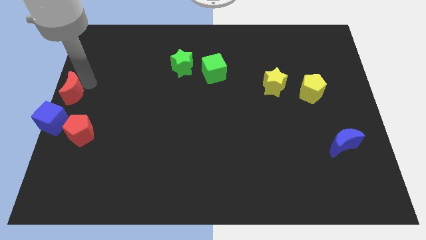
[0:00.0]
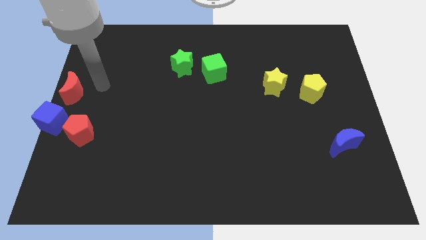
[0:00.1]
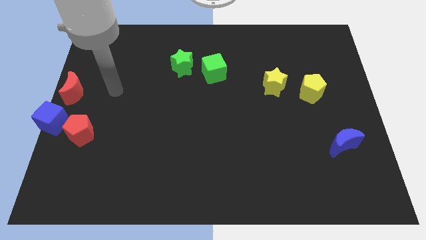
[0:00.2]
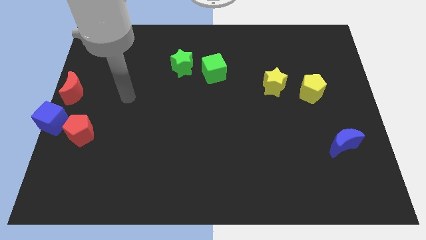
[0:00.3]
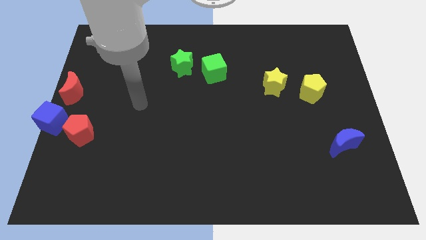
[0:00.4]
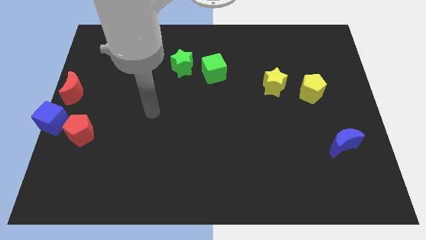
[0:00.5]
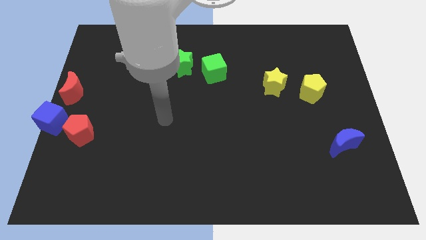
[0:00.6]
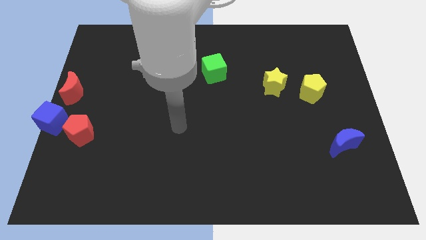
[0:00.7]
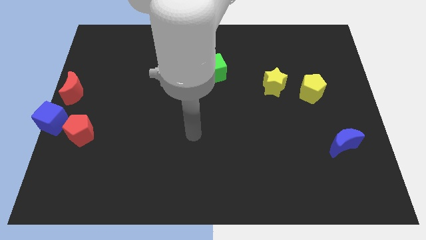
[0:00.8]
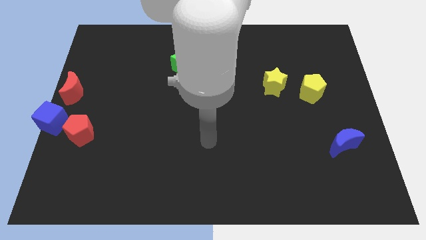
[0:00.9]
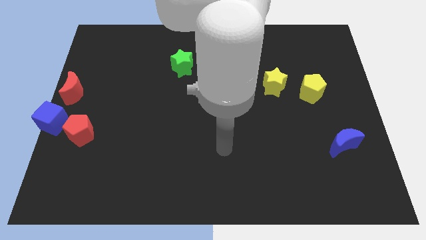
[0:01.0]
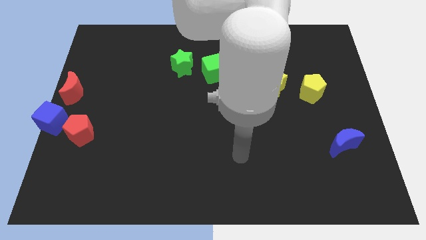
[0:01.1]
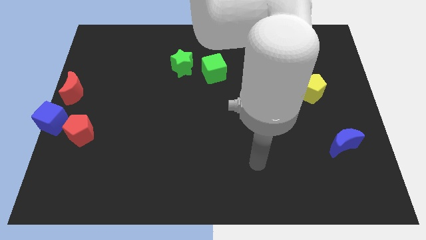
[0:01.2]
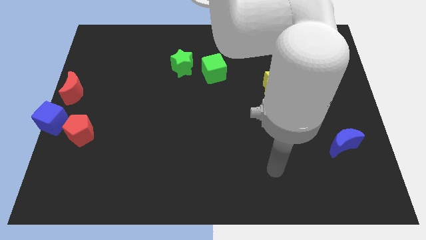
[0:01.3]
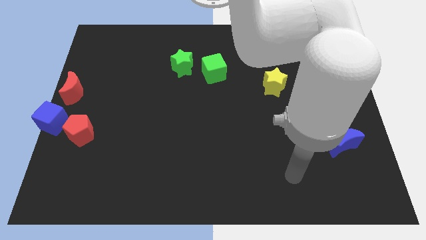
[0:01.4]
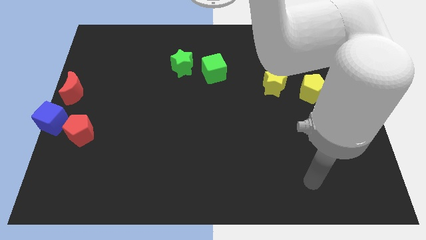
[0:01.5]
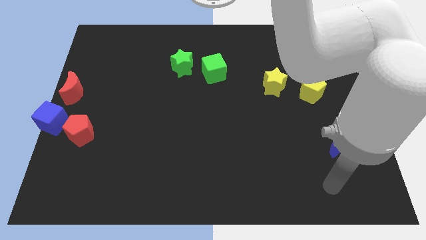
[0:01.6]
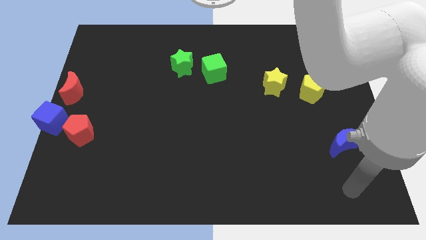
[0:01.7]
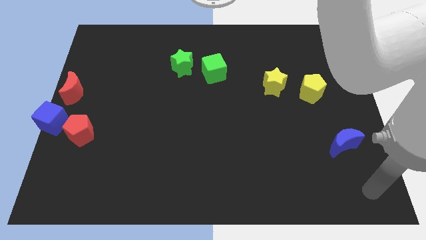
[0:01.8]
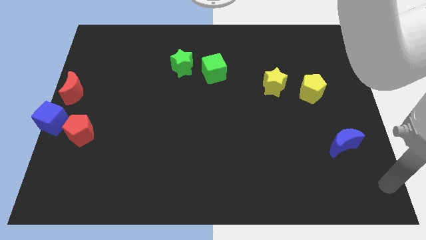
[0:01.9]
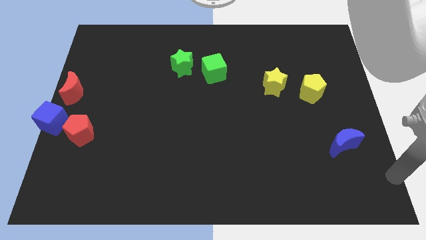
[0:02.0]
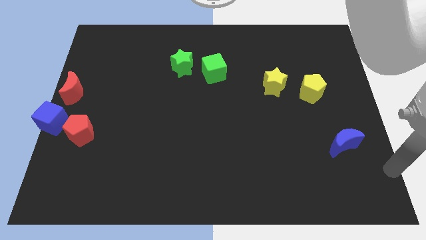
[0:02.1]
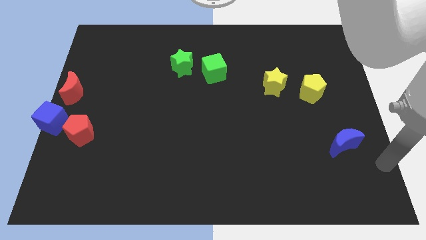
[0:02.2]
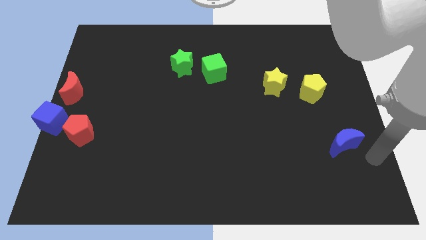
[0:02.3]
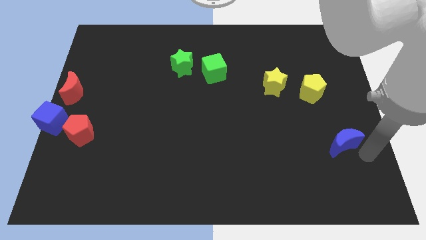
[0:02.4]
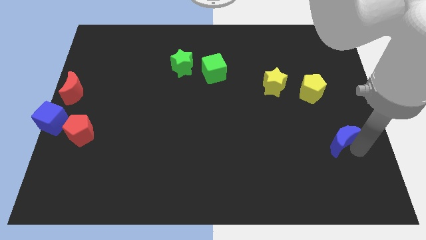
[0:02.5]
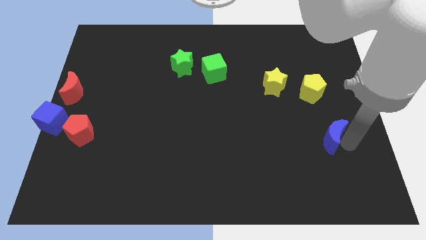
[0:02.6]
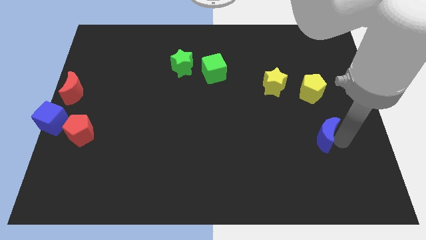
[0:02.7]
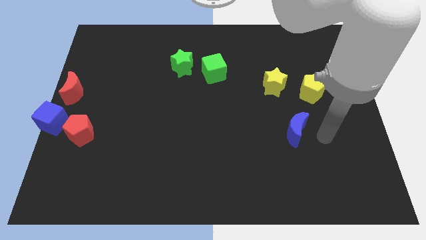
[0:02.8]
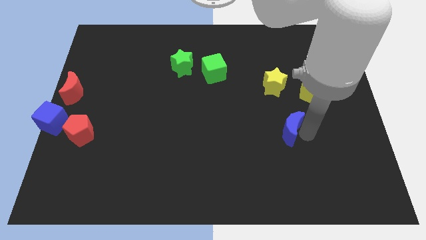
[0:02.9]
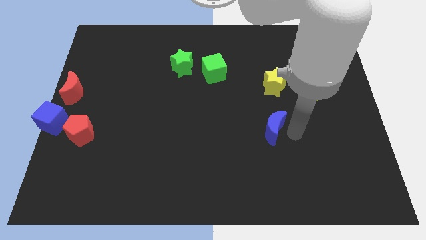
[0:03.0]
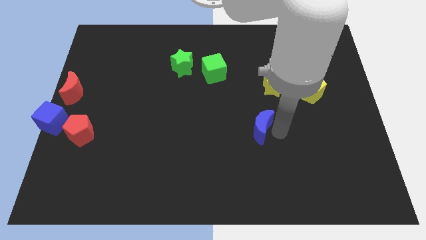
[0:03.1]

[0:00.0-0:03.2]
put the blue moon below the yellow star

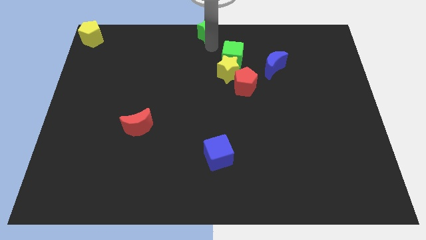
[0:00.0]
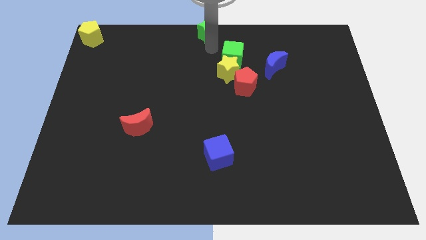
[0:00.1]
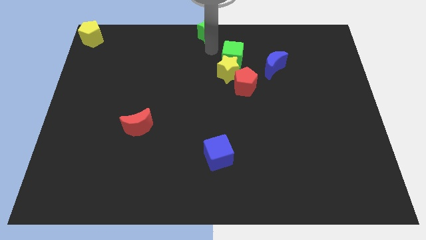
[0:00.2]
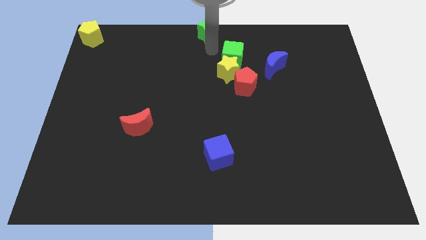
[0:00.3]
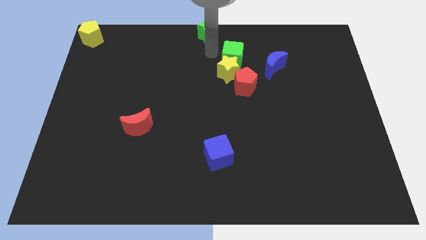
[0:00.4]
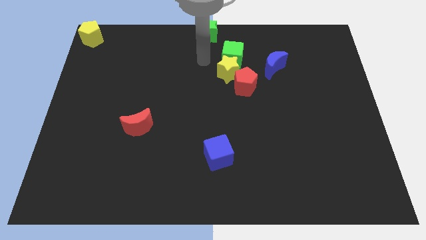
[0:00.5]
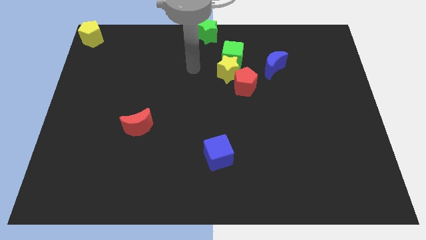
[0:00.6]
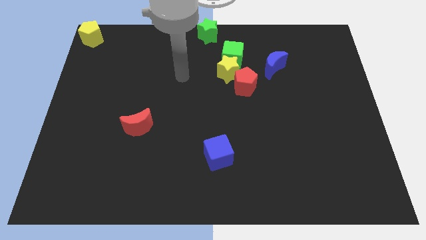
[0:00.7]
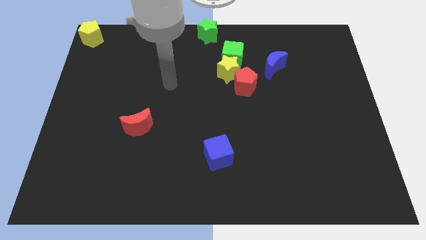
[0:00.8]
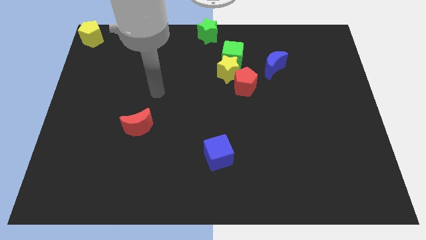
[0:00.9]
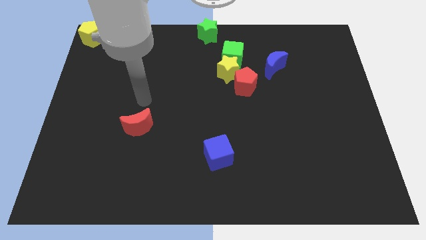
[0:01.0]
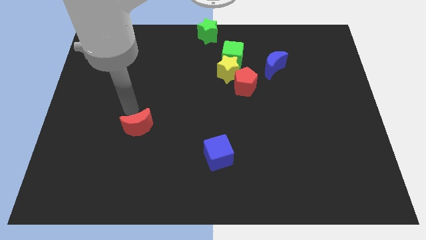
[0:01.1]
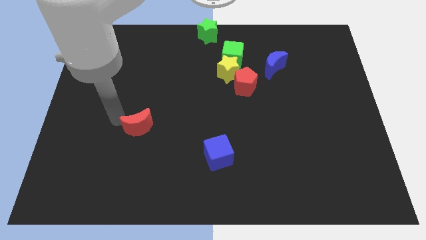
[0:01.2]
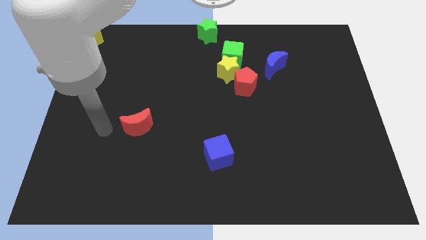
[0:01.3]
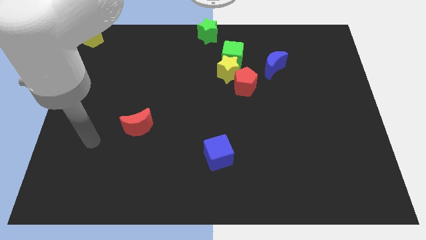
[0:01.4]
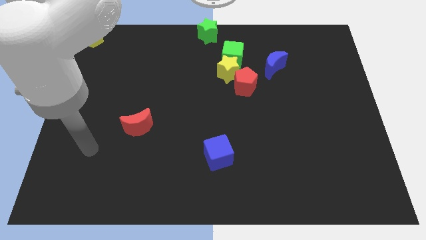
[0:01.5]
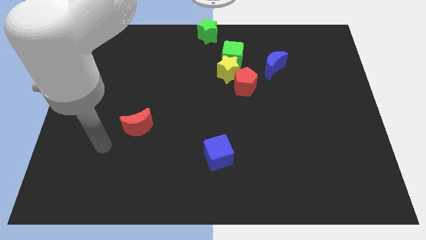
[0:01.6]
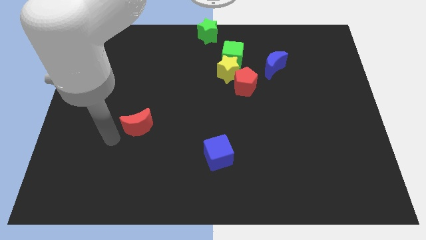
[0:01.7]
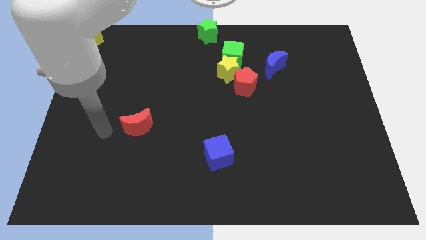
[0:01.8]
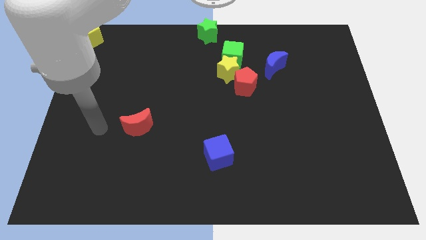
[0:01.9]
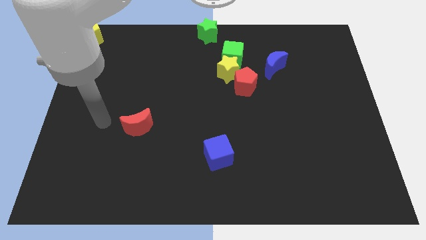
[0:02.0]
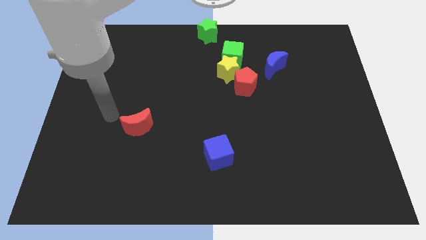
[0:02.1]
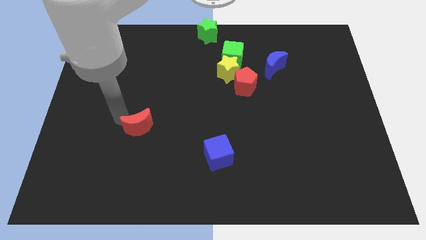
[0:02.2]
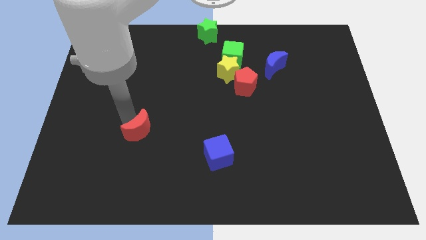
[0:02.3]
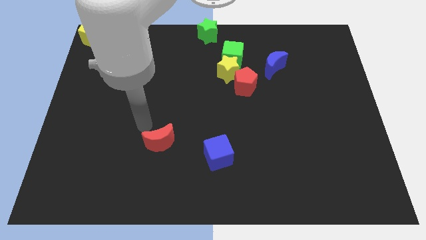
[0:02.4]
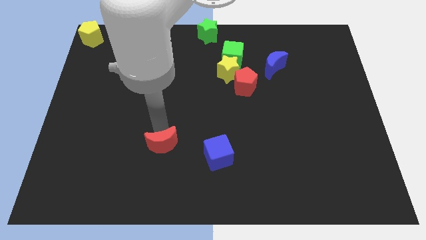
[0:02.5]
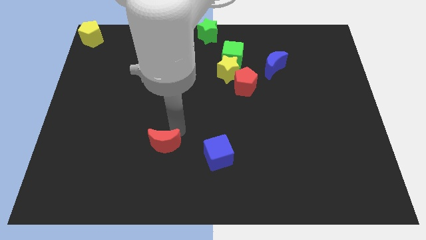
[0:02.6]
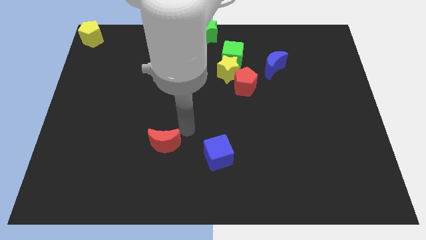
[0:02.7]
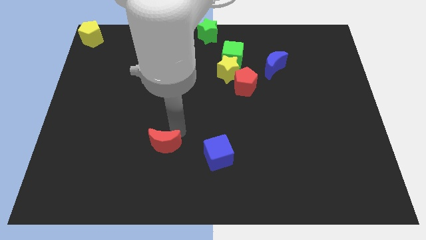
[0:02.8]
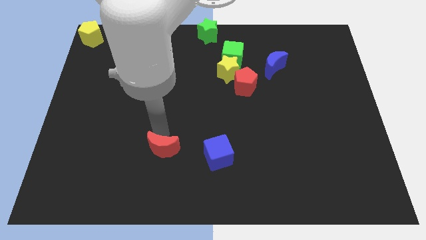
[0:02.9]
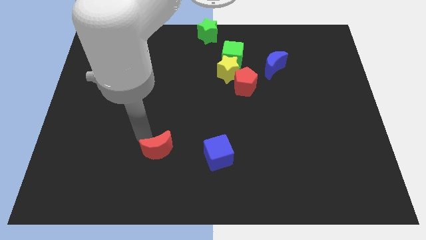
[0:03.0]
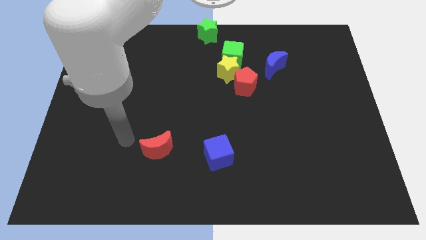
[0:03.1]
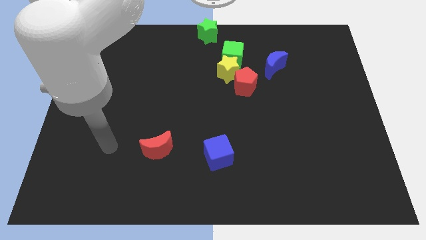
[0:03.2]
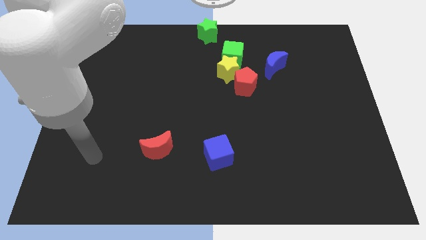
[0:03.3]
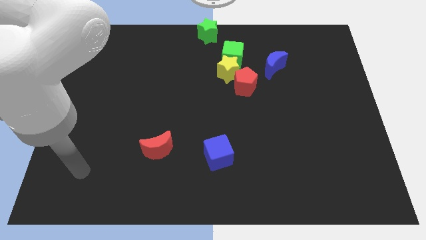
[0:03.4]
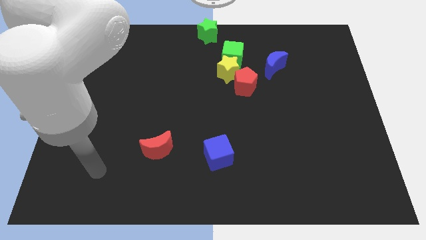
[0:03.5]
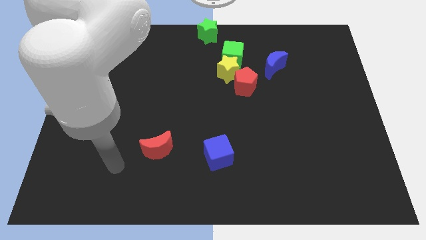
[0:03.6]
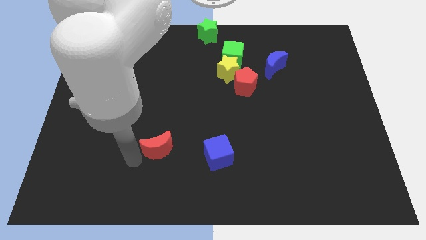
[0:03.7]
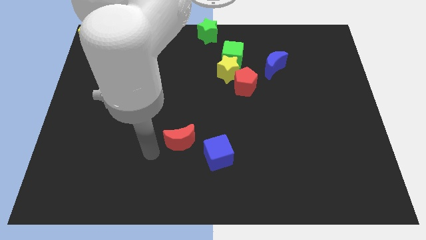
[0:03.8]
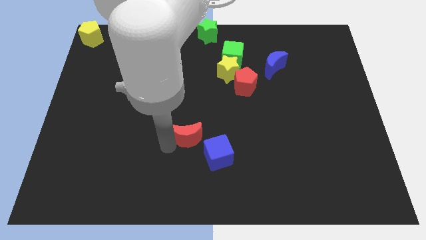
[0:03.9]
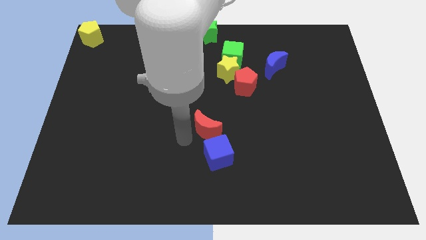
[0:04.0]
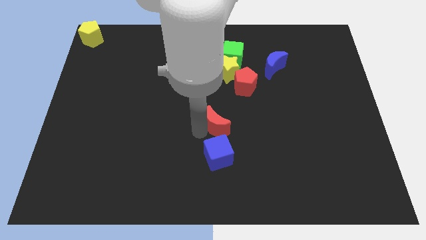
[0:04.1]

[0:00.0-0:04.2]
move the red crescent to the top of blue cube

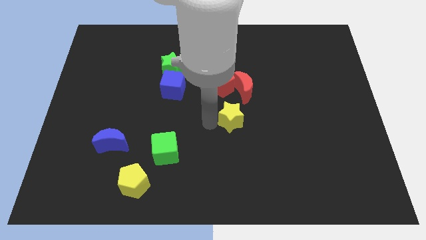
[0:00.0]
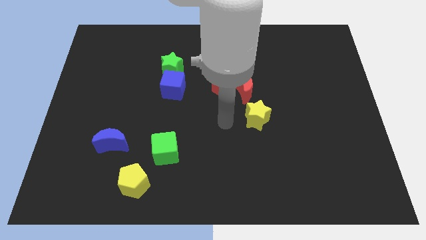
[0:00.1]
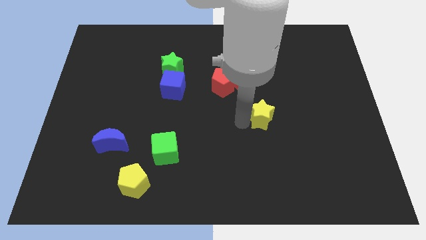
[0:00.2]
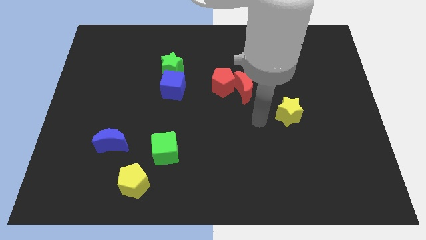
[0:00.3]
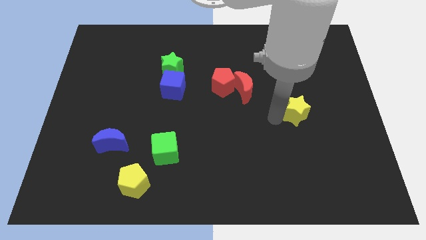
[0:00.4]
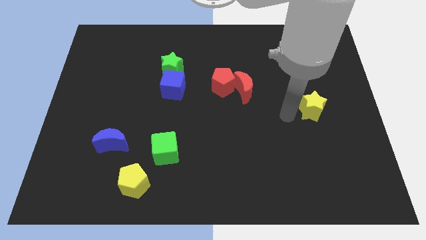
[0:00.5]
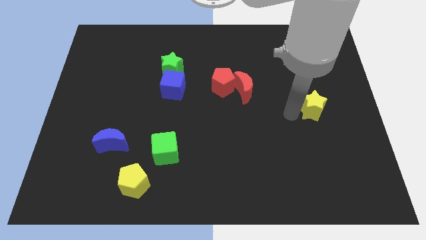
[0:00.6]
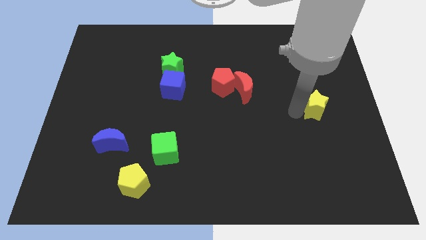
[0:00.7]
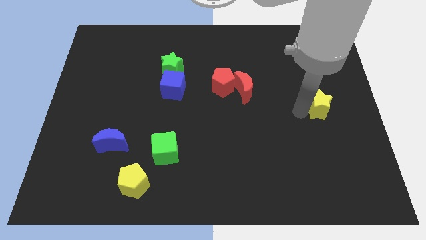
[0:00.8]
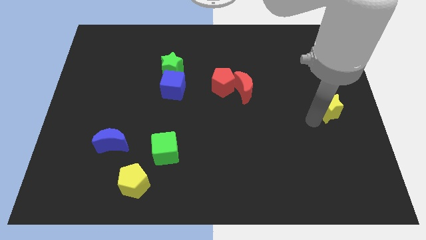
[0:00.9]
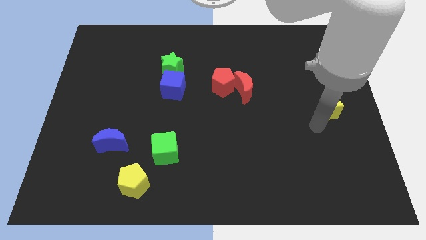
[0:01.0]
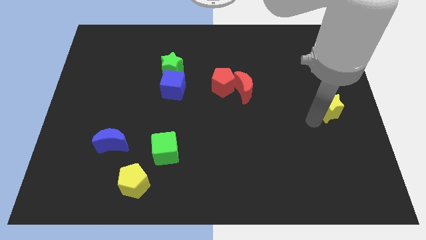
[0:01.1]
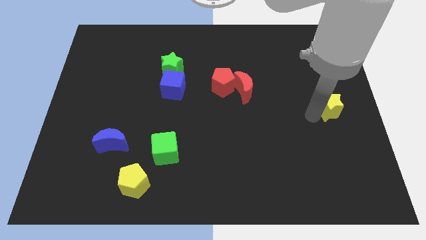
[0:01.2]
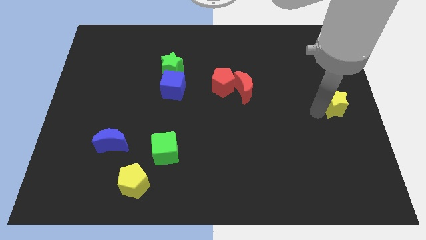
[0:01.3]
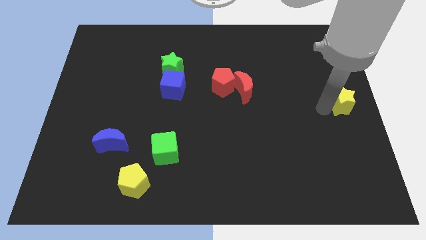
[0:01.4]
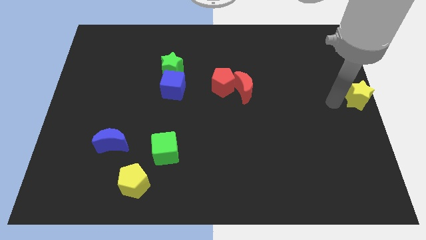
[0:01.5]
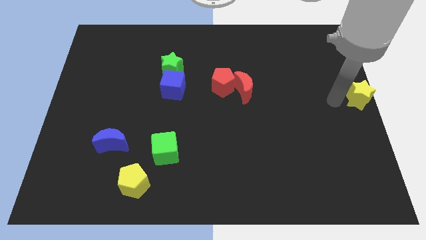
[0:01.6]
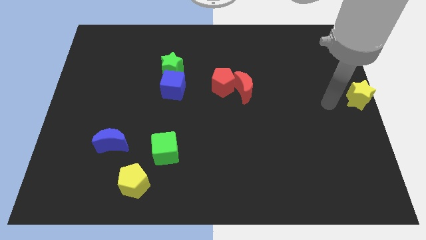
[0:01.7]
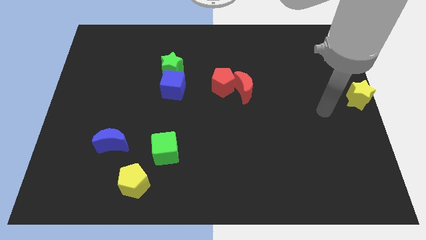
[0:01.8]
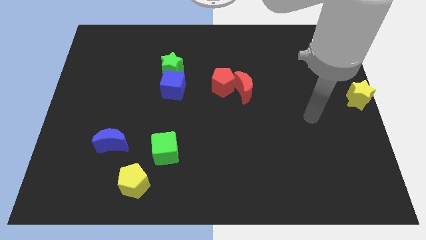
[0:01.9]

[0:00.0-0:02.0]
push the yellow star towards the right of the board
